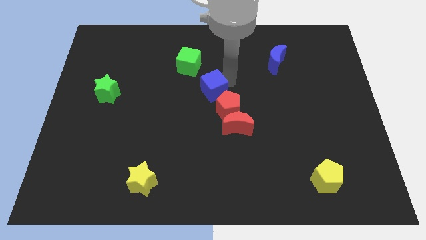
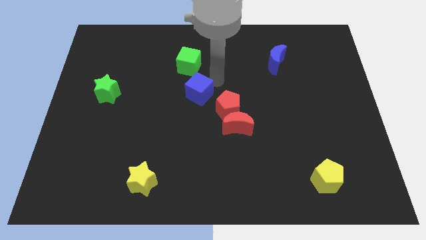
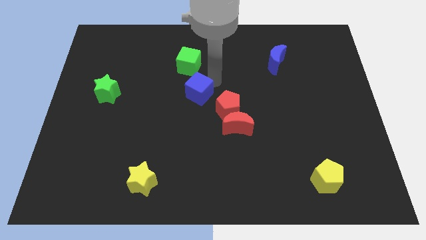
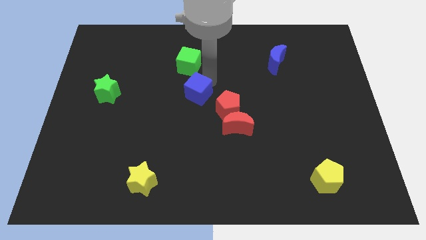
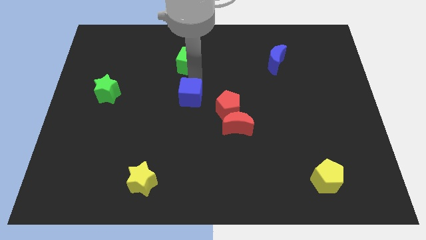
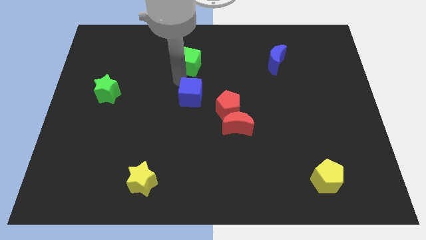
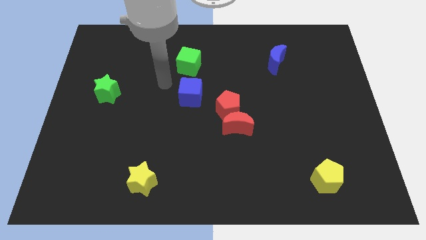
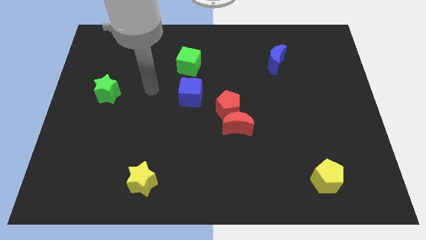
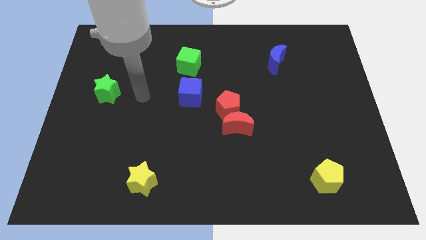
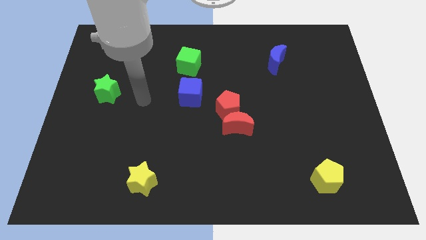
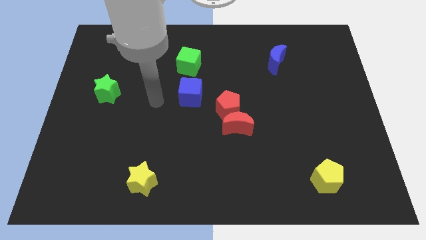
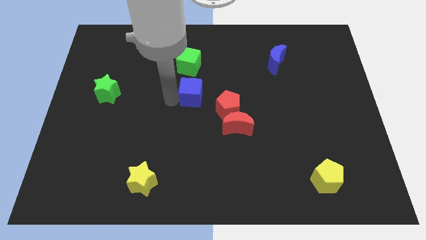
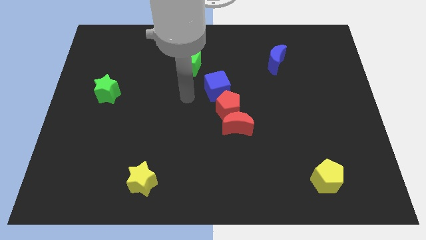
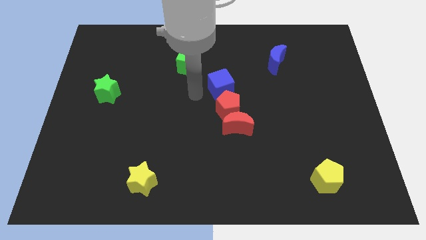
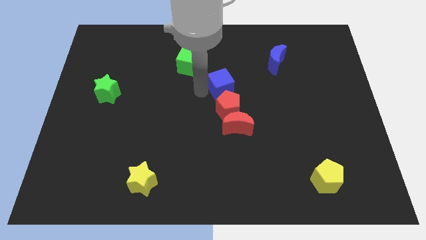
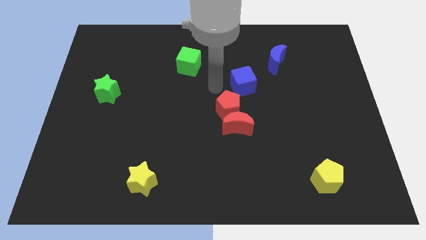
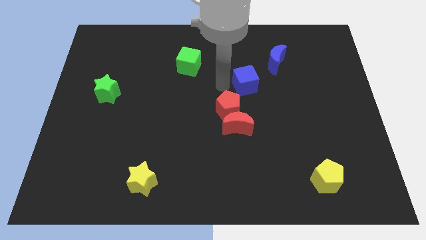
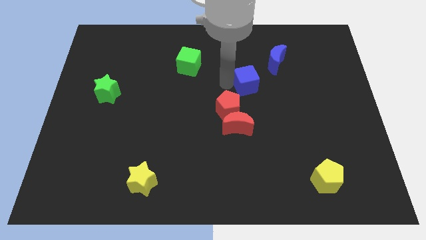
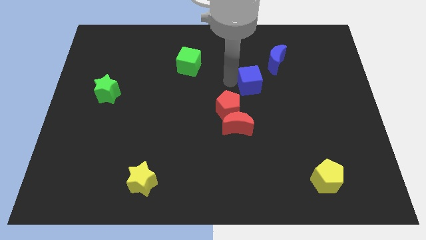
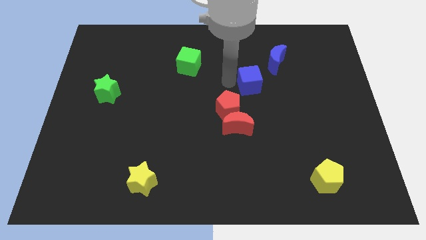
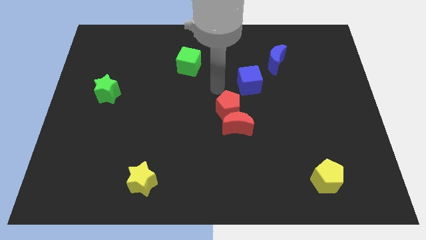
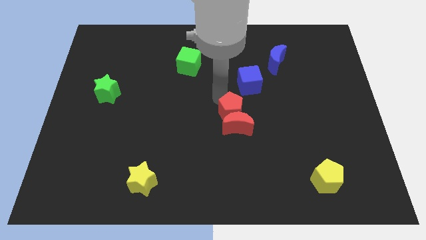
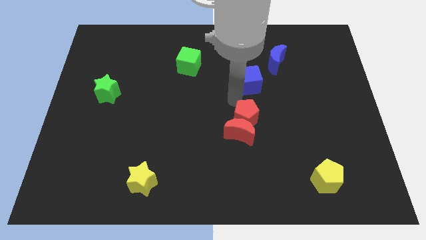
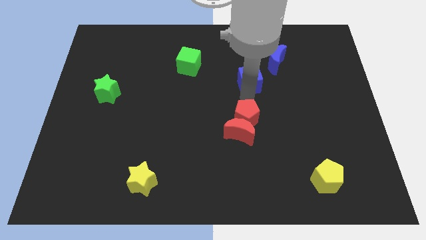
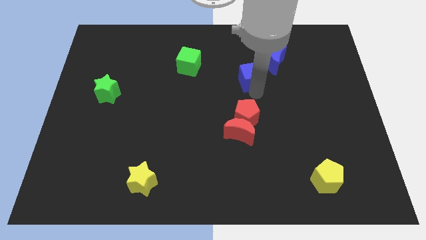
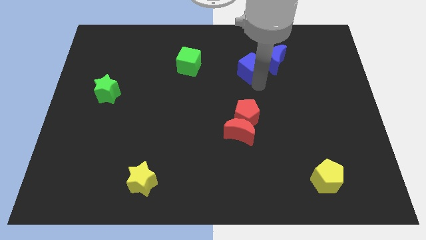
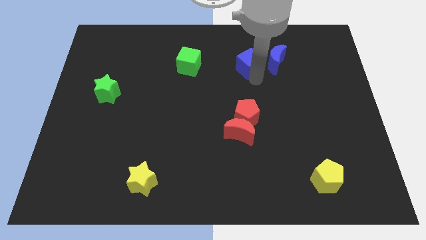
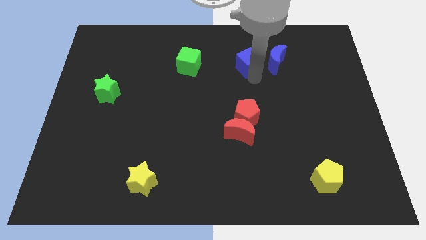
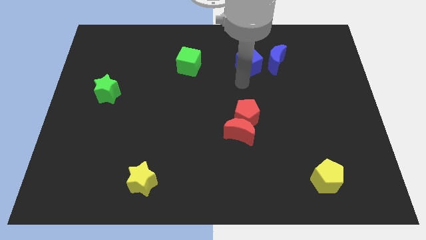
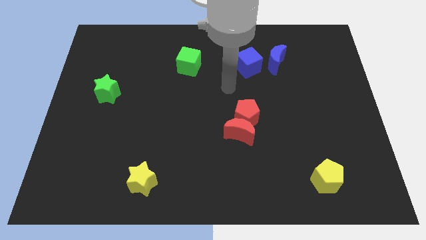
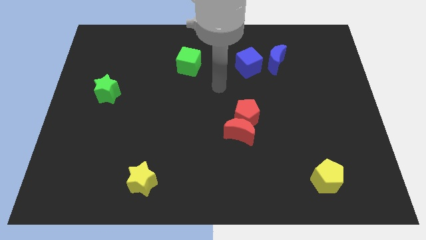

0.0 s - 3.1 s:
place the blue cube to the left of the blue moon

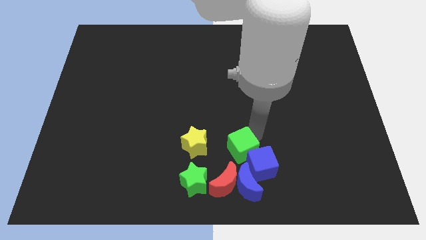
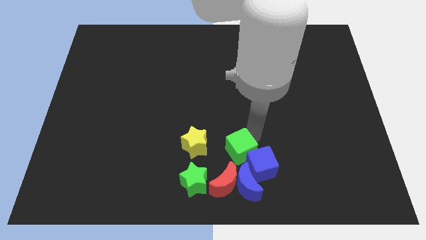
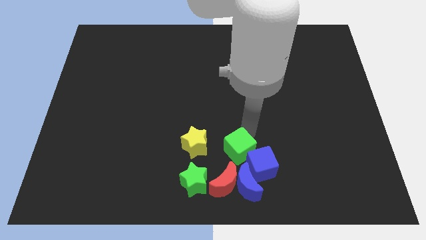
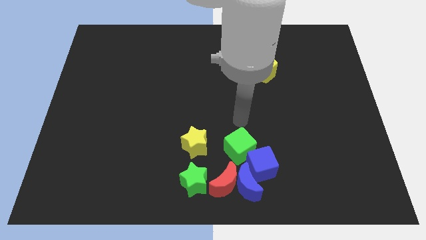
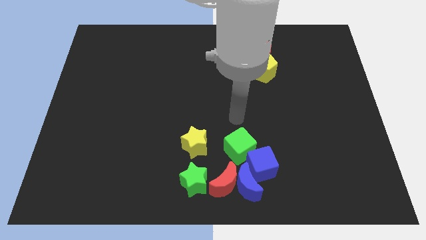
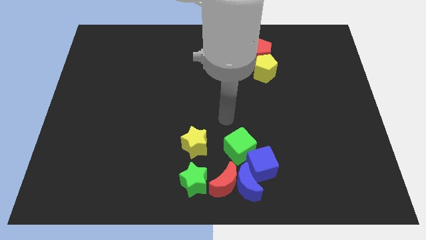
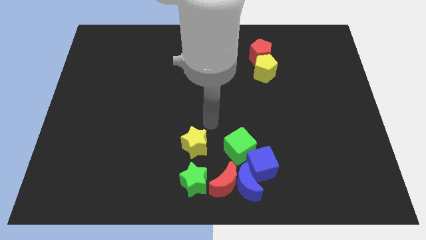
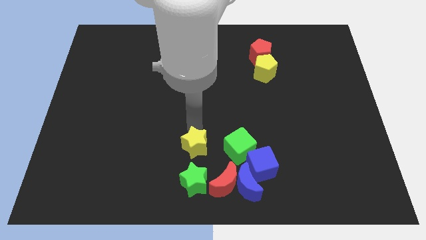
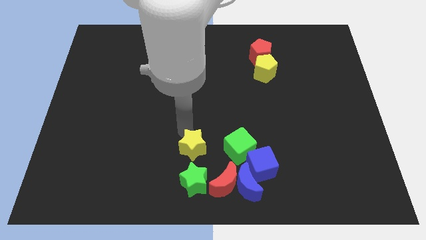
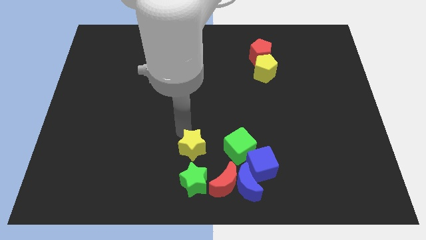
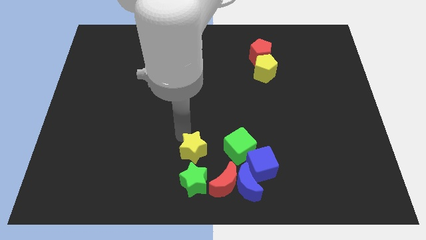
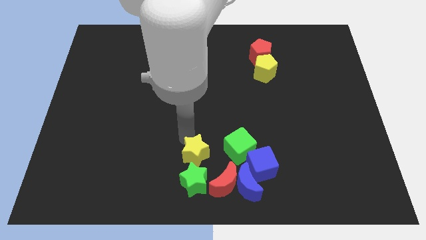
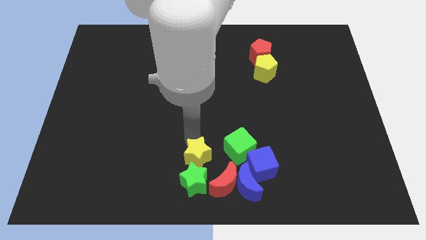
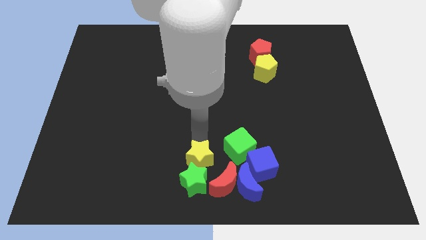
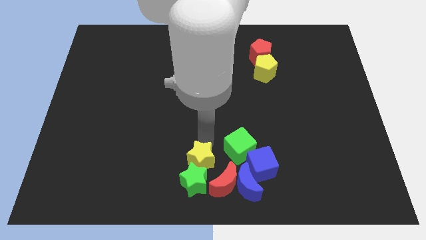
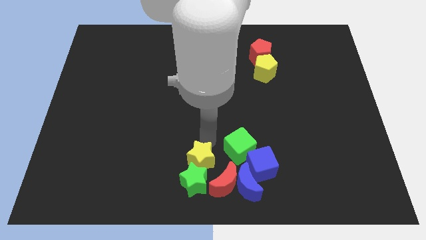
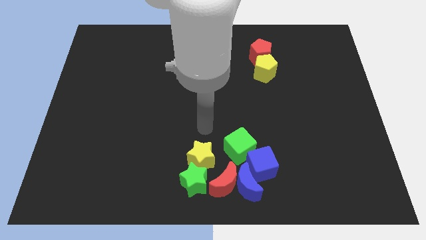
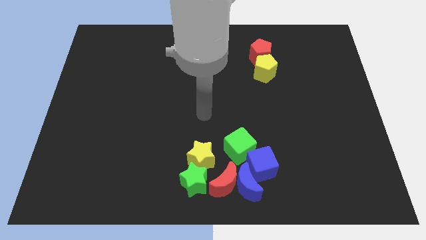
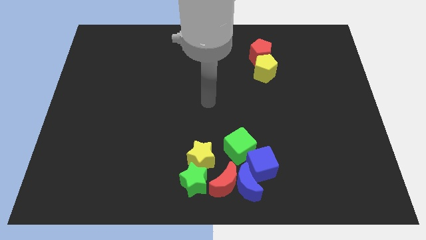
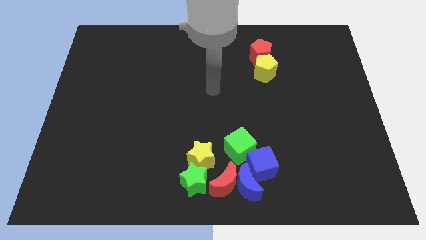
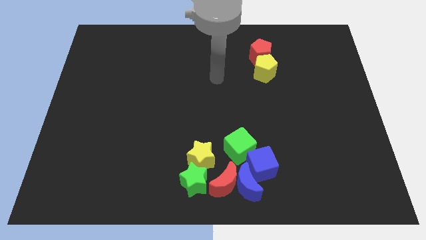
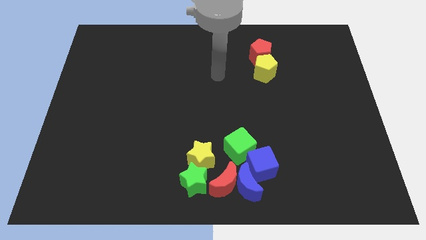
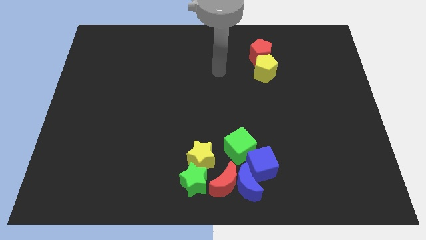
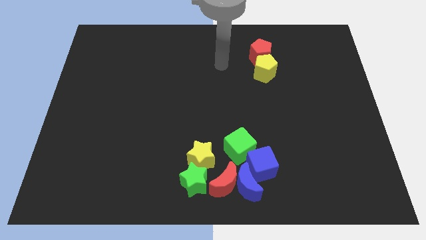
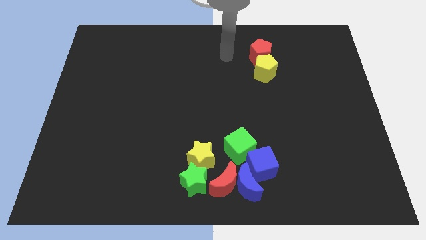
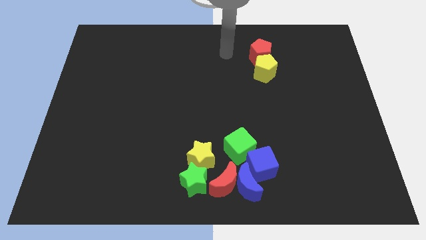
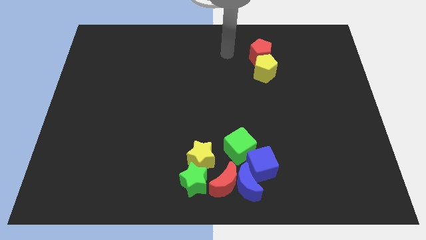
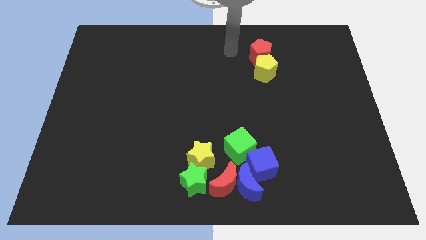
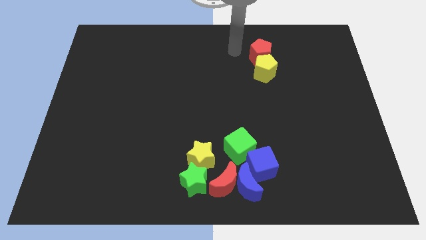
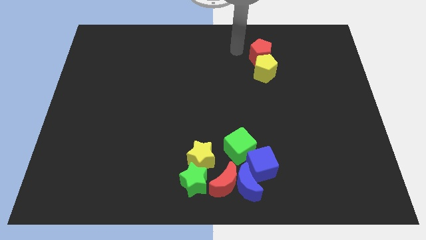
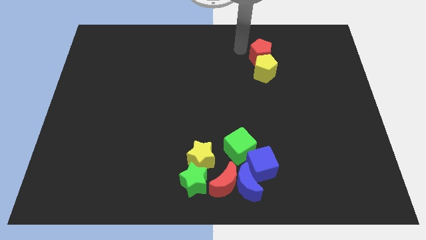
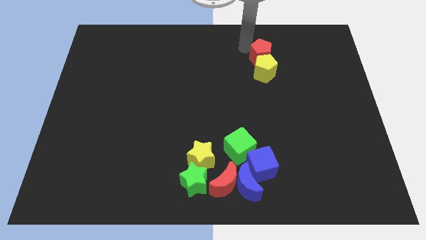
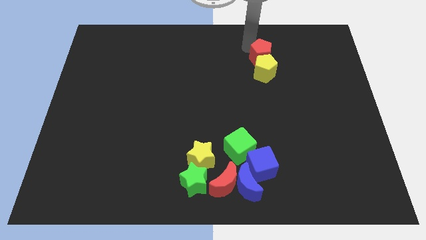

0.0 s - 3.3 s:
move the yellow star right above the green star

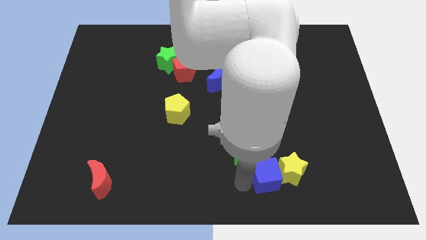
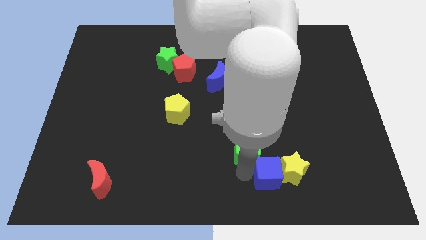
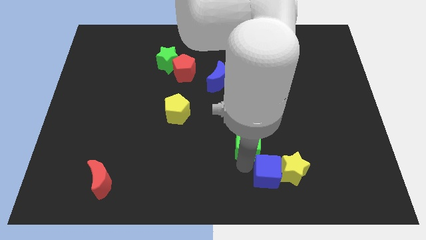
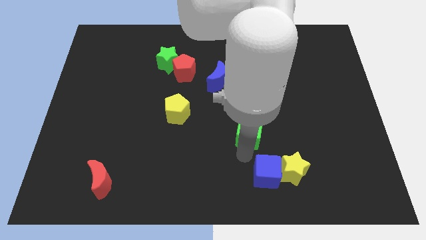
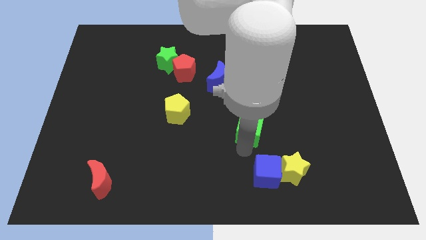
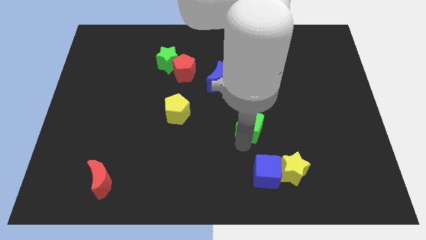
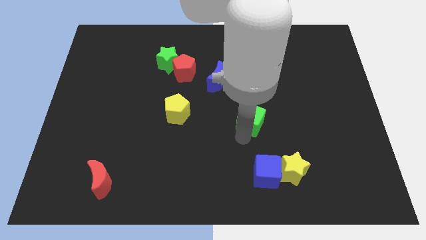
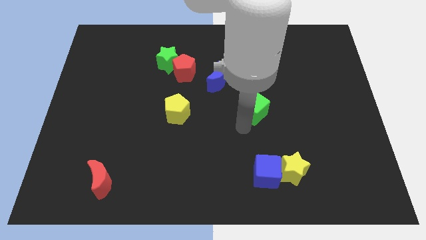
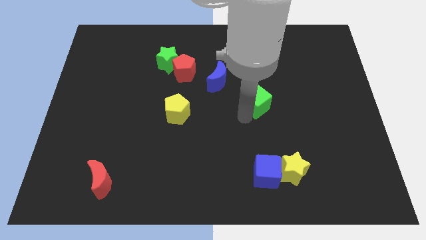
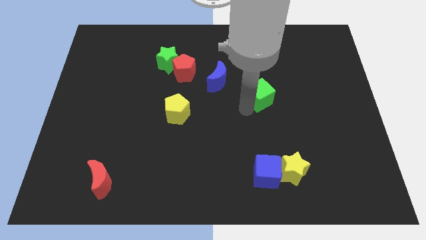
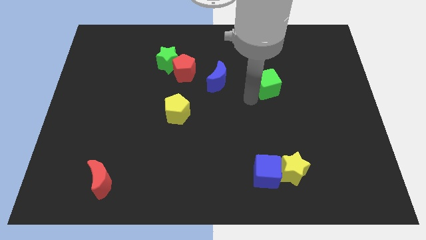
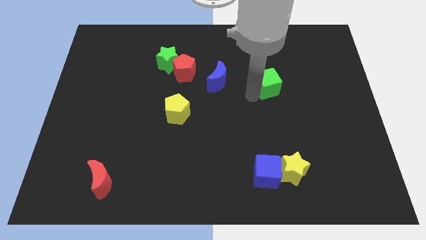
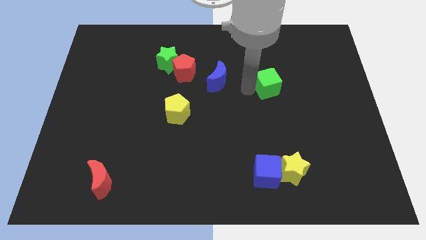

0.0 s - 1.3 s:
slightly move the green cube up

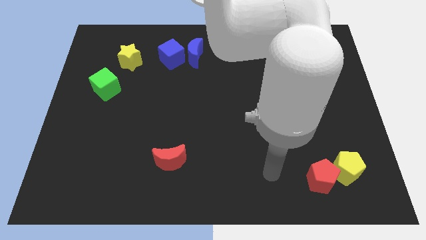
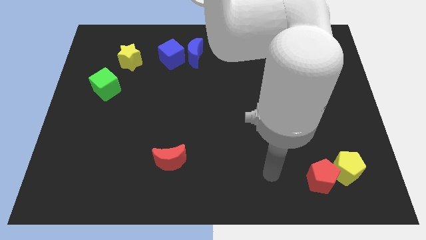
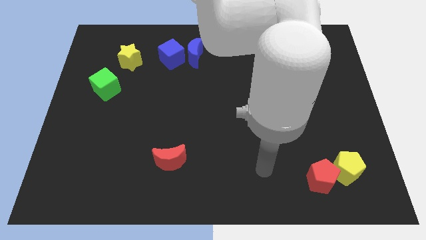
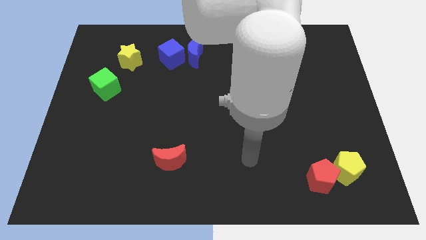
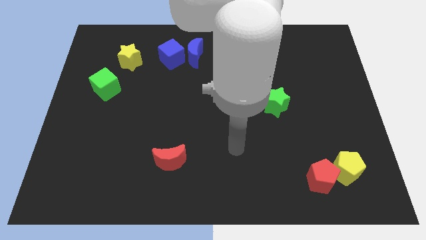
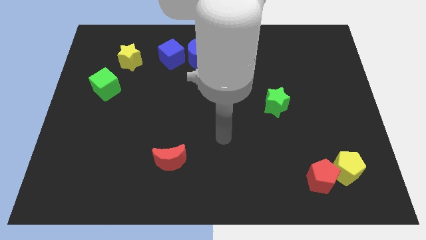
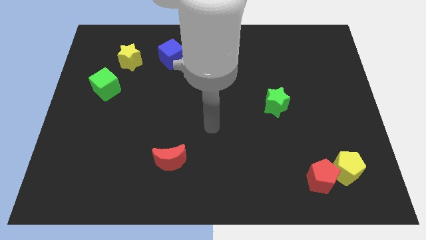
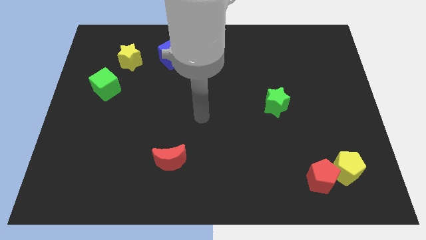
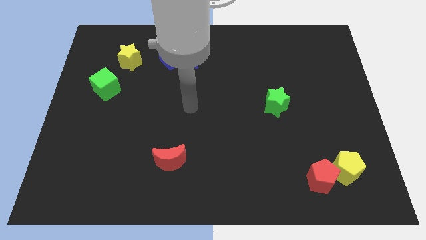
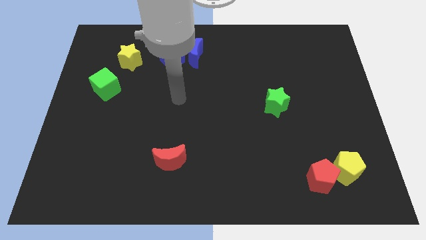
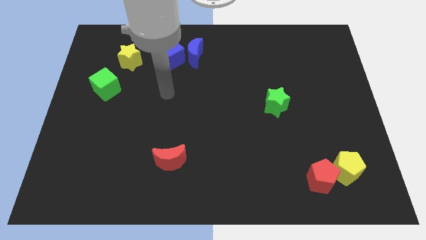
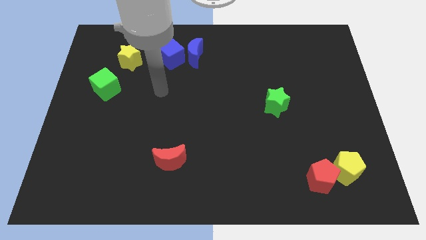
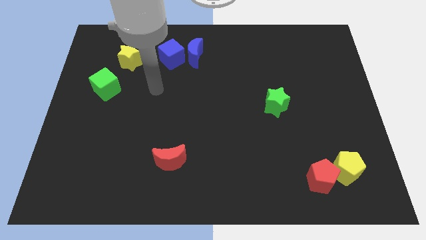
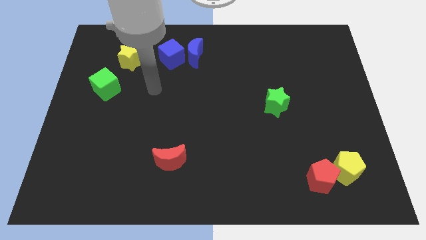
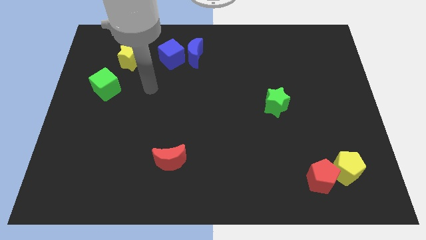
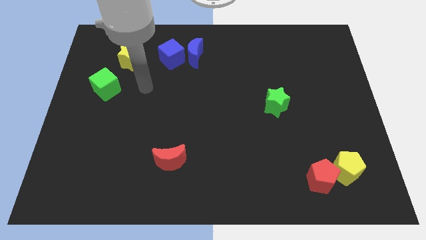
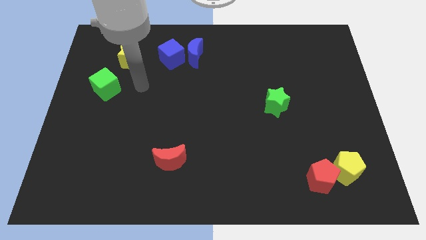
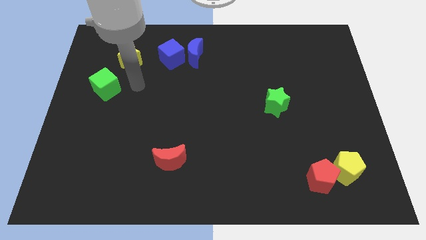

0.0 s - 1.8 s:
place your hand to the right of the green cube
